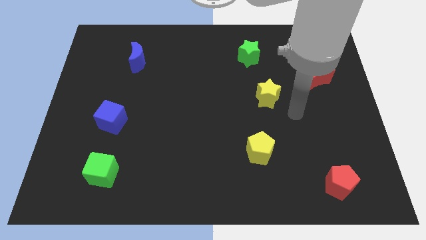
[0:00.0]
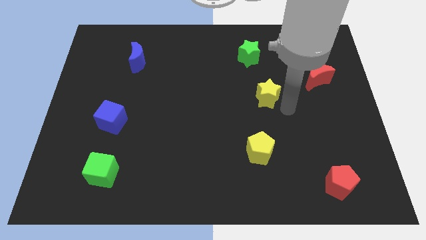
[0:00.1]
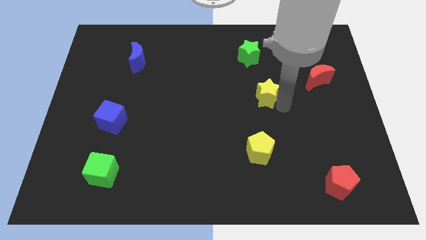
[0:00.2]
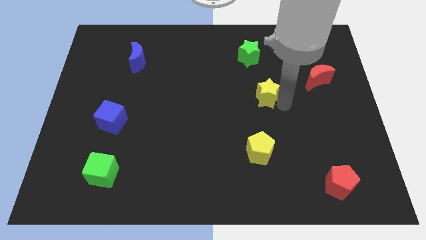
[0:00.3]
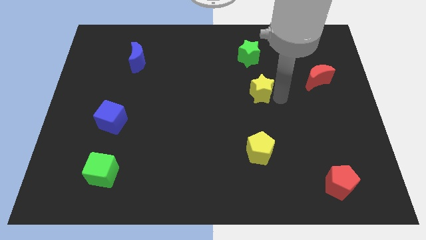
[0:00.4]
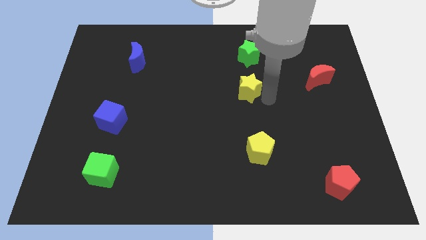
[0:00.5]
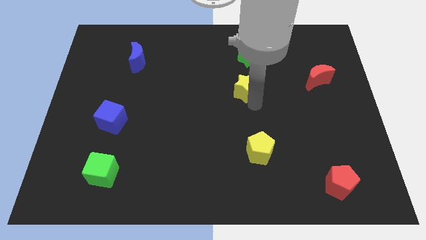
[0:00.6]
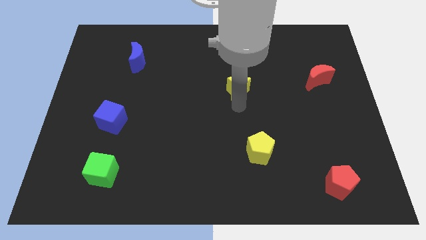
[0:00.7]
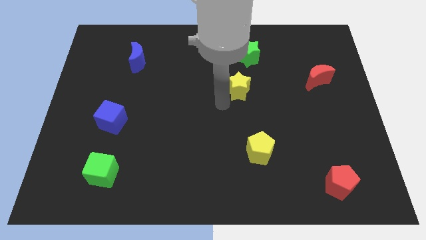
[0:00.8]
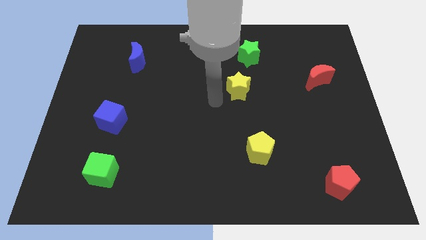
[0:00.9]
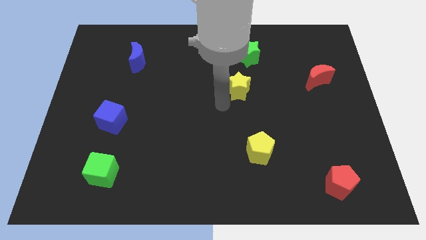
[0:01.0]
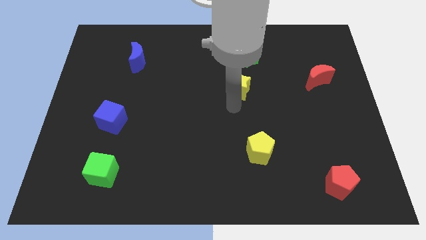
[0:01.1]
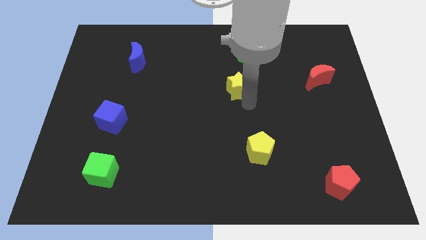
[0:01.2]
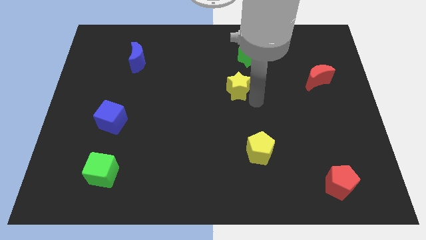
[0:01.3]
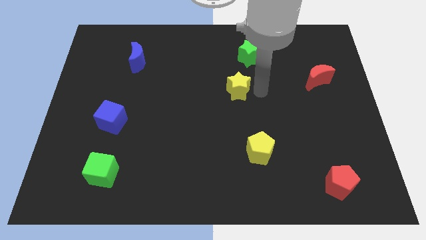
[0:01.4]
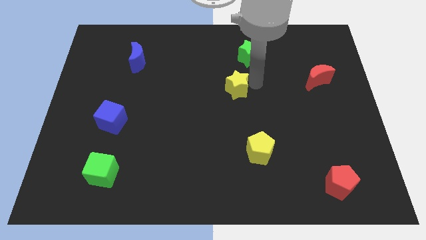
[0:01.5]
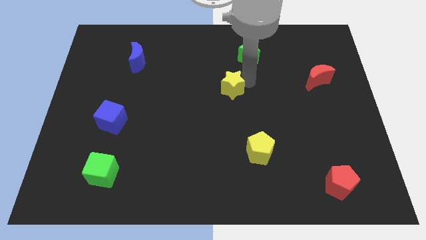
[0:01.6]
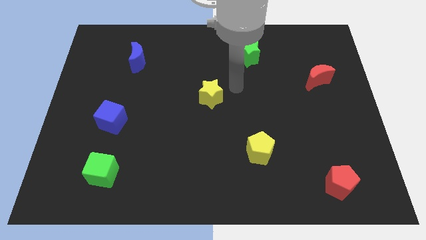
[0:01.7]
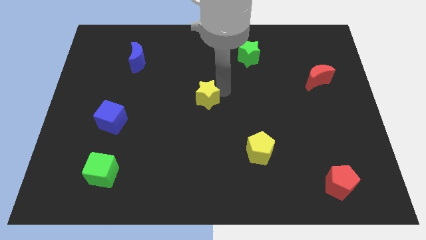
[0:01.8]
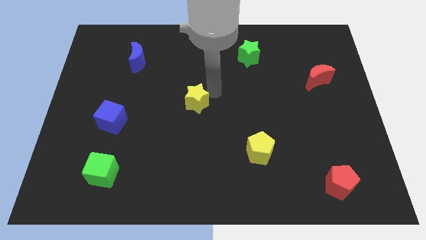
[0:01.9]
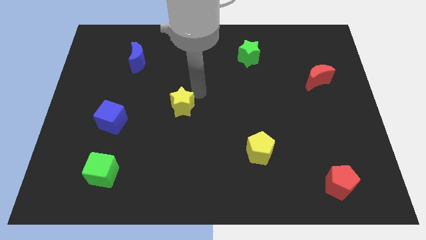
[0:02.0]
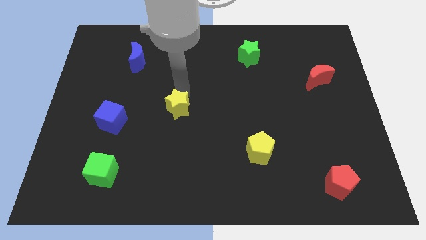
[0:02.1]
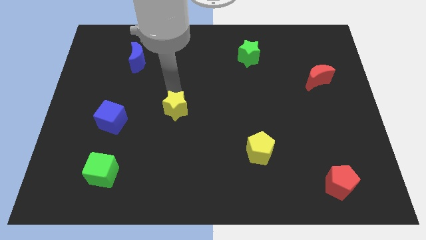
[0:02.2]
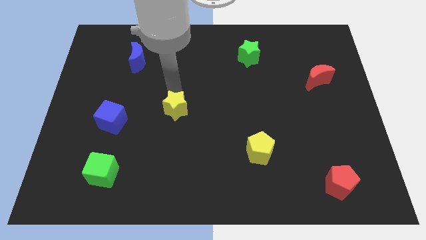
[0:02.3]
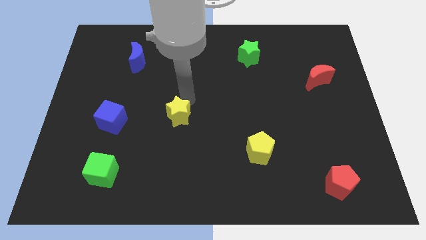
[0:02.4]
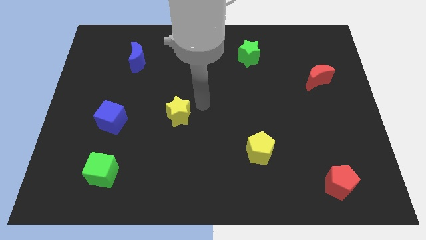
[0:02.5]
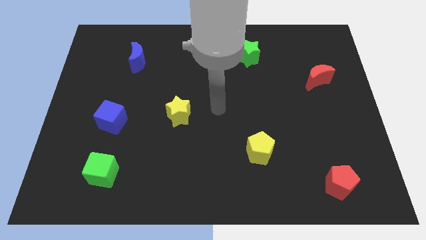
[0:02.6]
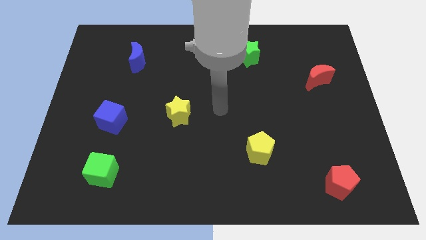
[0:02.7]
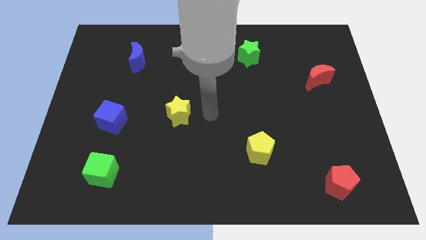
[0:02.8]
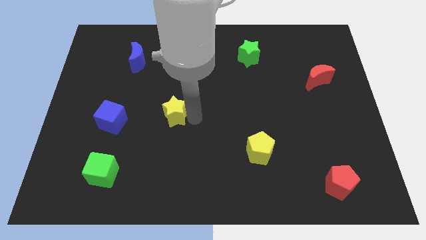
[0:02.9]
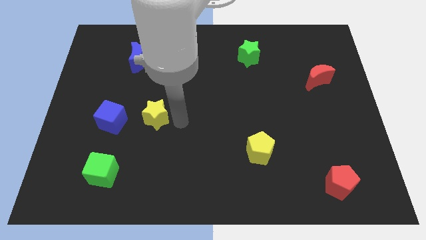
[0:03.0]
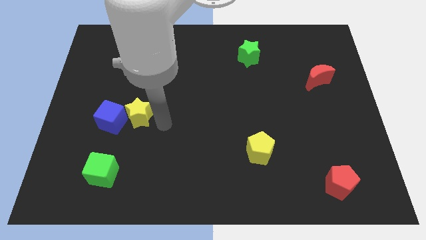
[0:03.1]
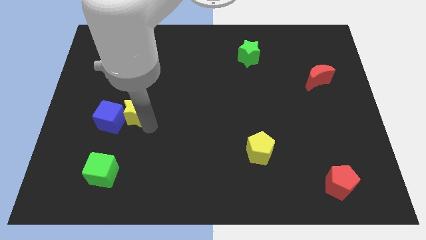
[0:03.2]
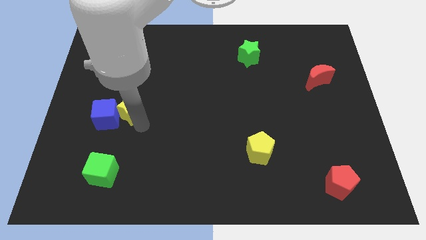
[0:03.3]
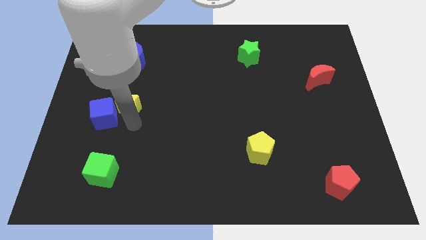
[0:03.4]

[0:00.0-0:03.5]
move the yellow star right beside the blue cube

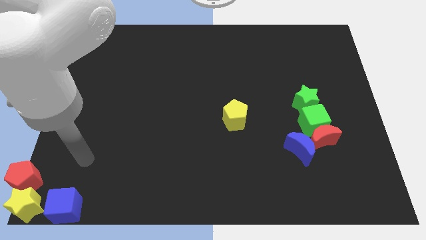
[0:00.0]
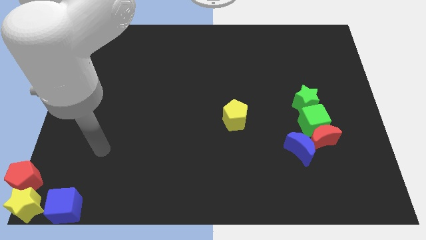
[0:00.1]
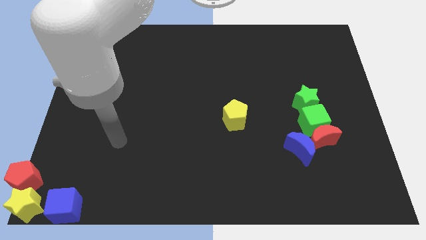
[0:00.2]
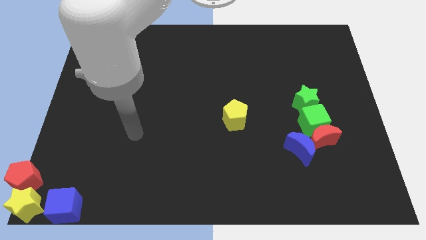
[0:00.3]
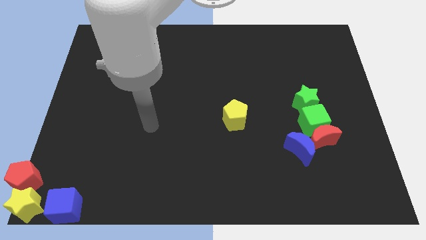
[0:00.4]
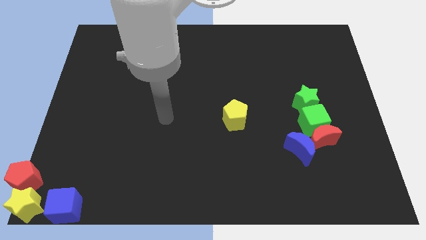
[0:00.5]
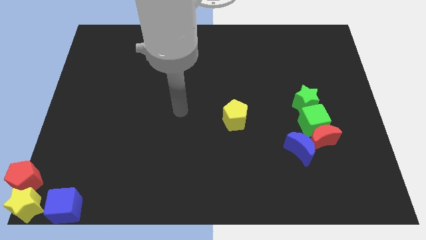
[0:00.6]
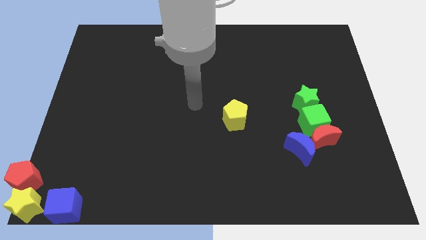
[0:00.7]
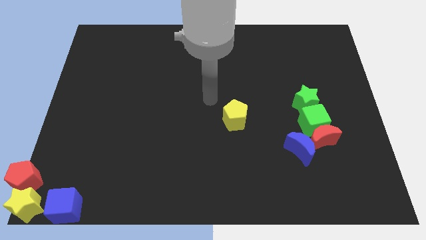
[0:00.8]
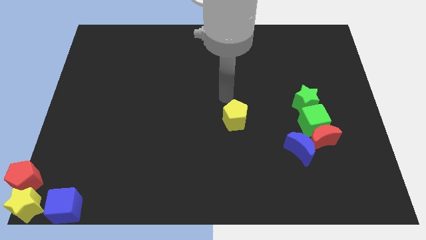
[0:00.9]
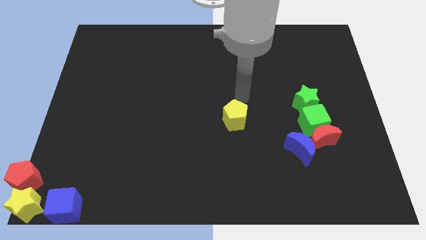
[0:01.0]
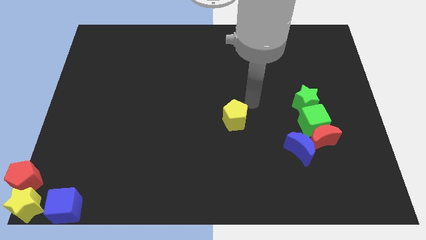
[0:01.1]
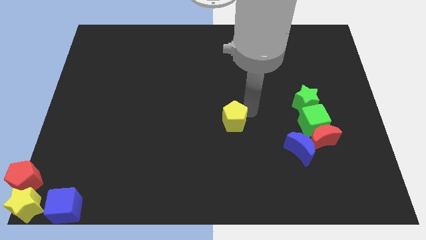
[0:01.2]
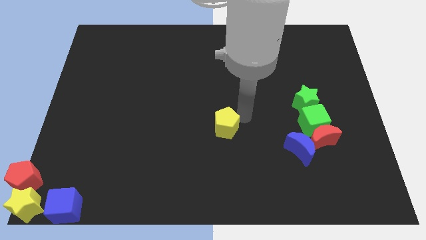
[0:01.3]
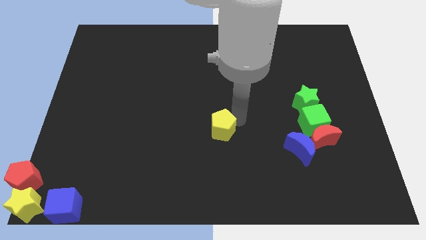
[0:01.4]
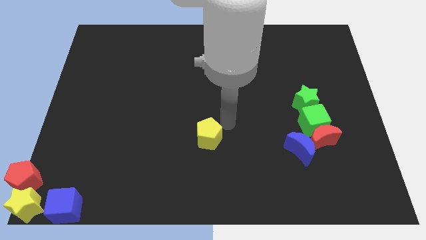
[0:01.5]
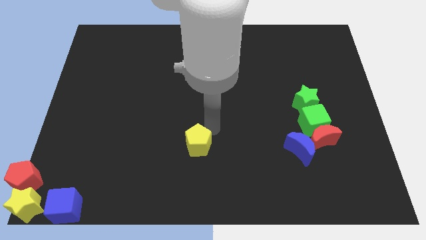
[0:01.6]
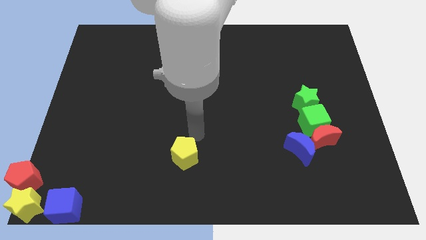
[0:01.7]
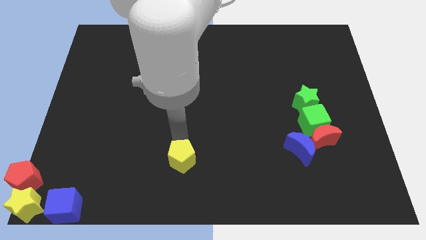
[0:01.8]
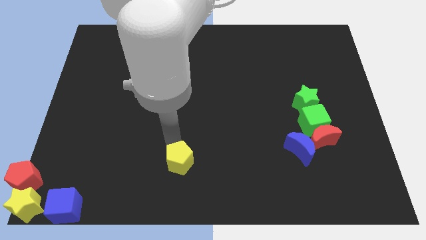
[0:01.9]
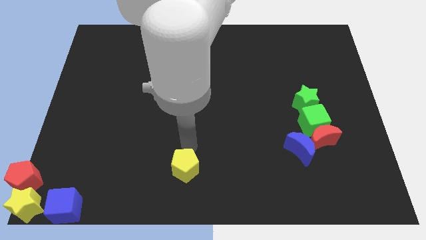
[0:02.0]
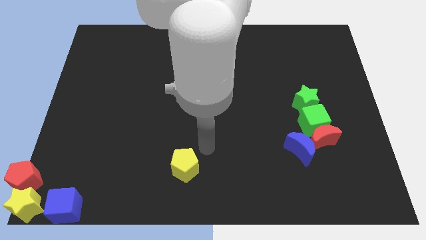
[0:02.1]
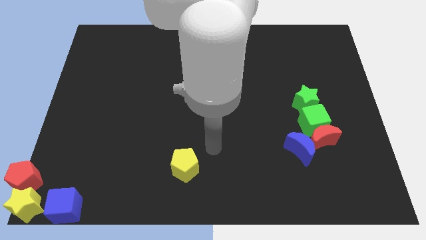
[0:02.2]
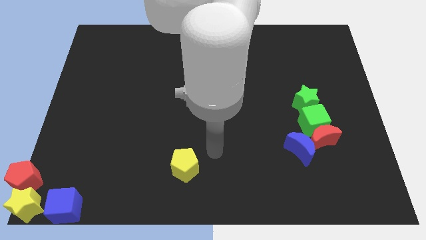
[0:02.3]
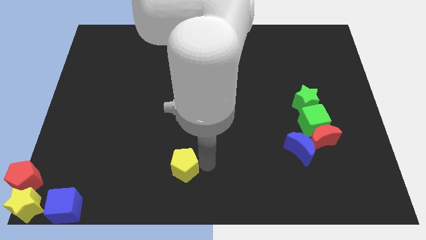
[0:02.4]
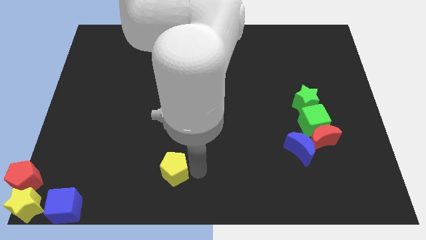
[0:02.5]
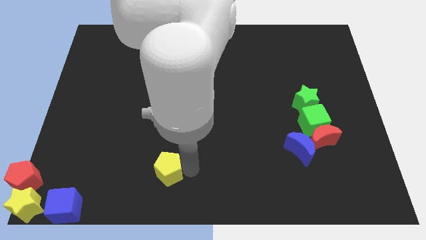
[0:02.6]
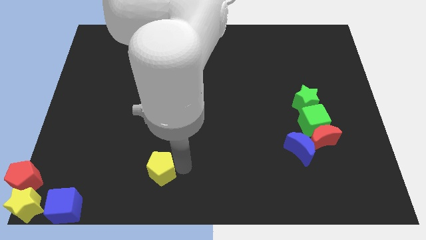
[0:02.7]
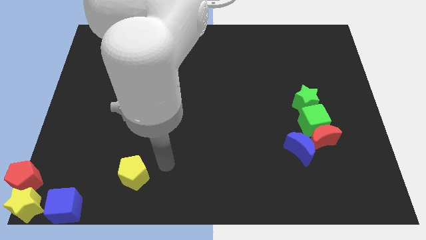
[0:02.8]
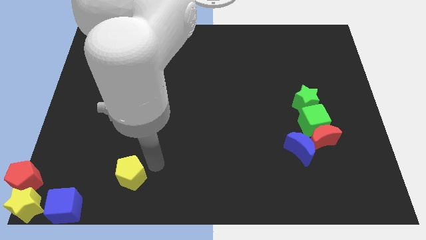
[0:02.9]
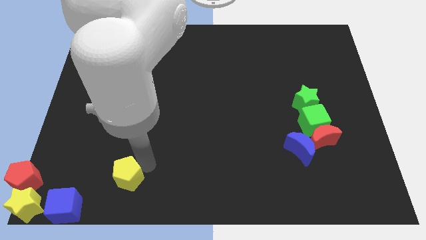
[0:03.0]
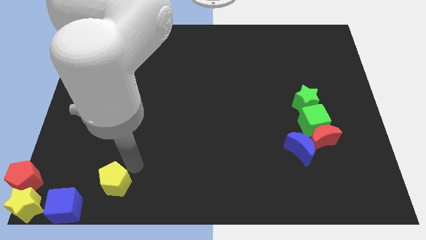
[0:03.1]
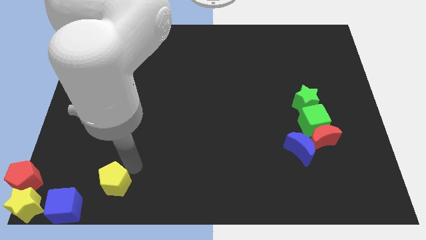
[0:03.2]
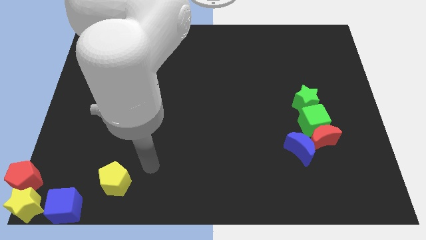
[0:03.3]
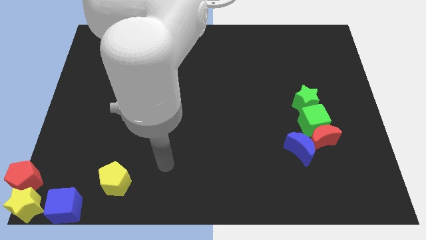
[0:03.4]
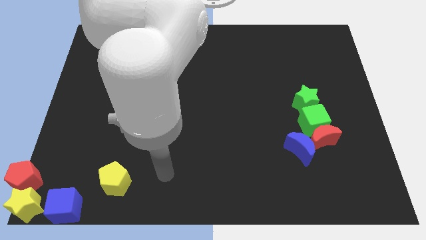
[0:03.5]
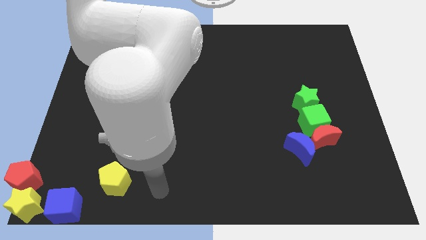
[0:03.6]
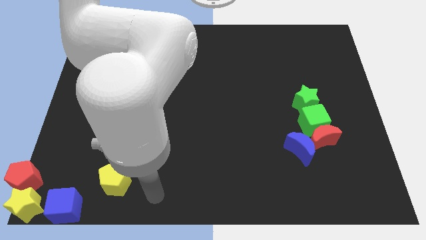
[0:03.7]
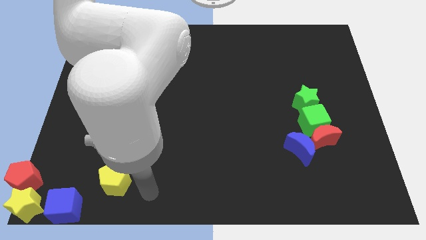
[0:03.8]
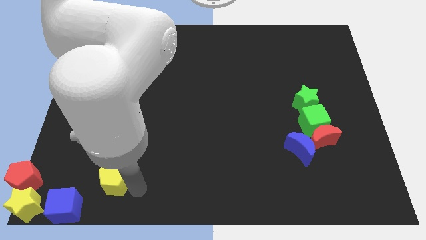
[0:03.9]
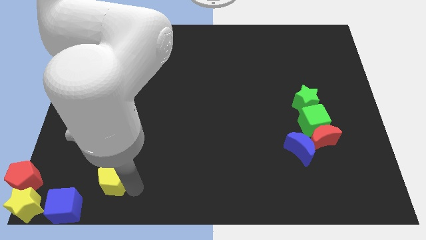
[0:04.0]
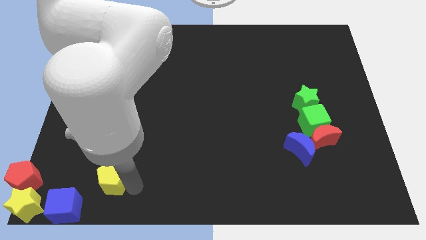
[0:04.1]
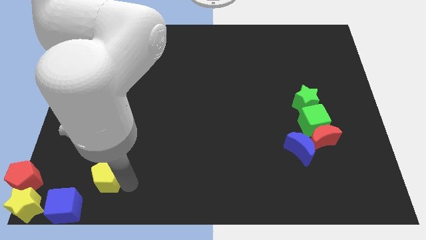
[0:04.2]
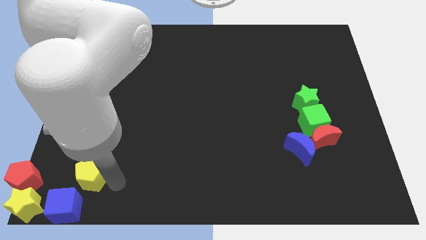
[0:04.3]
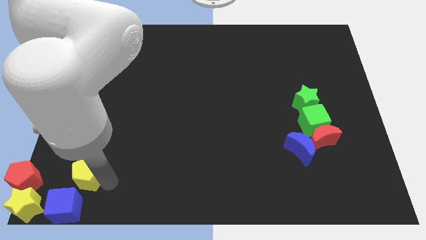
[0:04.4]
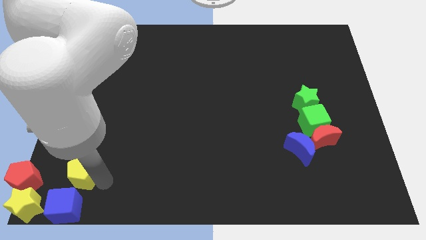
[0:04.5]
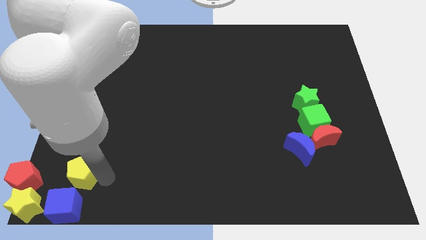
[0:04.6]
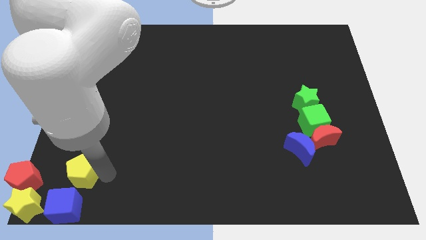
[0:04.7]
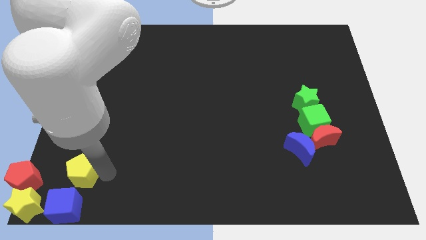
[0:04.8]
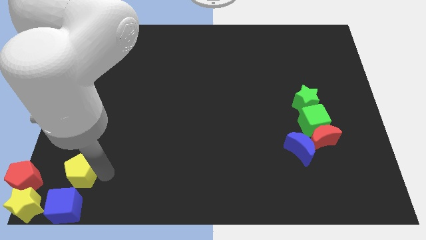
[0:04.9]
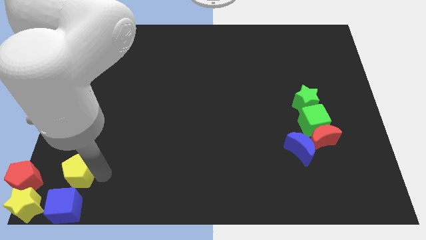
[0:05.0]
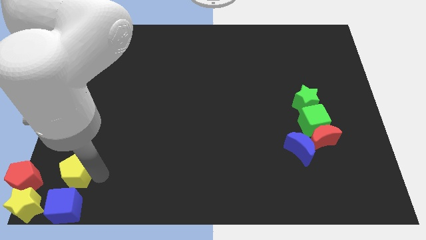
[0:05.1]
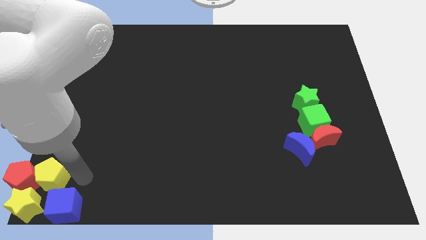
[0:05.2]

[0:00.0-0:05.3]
push the yellow pentagon above the blue cube

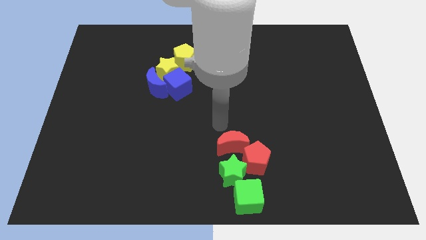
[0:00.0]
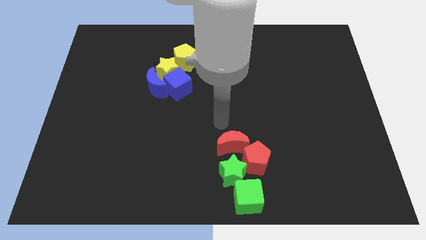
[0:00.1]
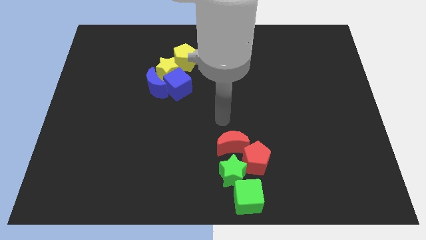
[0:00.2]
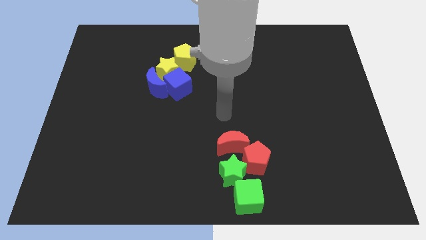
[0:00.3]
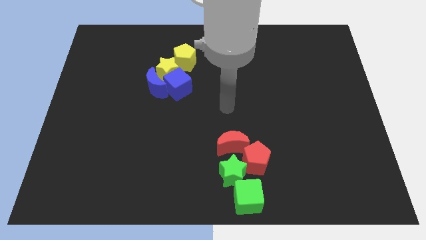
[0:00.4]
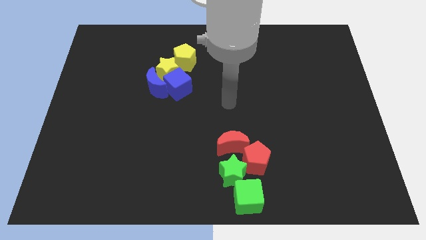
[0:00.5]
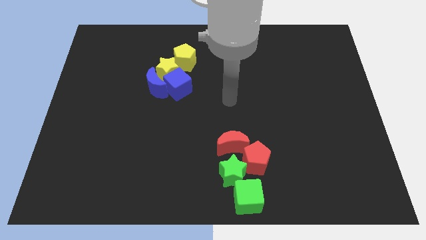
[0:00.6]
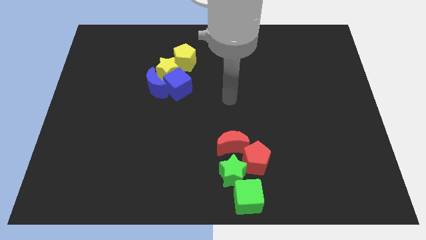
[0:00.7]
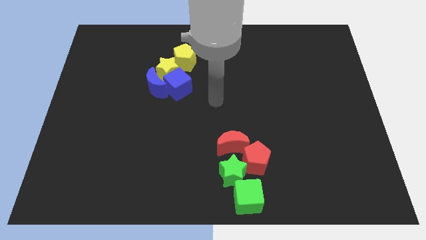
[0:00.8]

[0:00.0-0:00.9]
place your hand at center of the board
